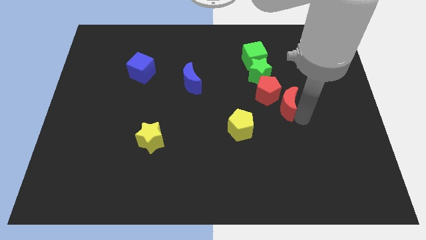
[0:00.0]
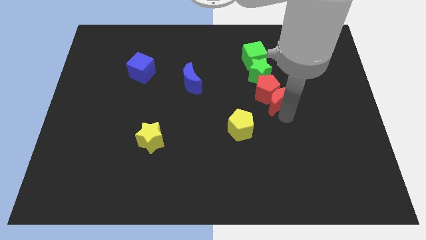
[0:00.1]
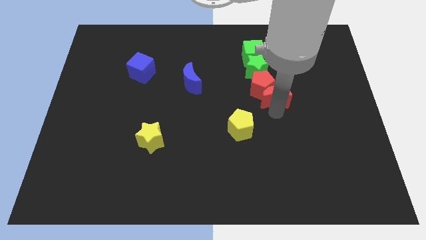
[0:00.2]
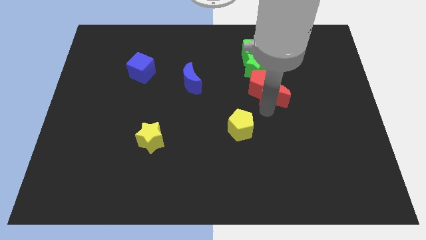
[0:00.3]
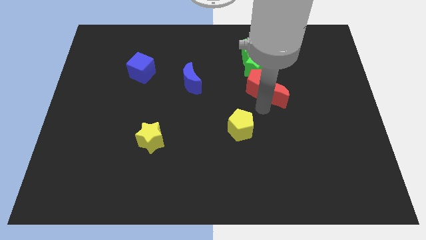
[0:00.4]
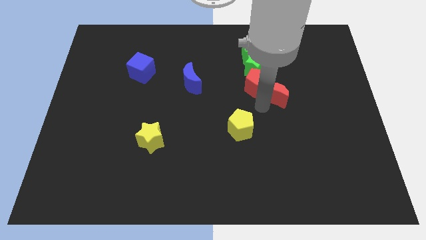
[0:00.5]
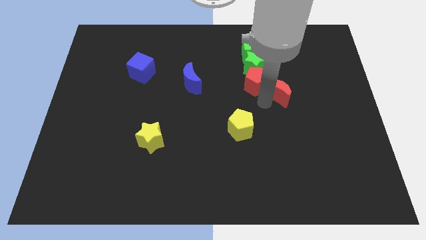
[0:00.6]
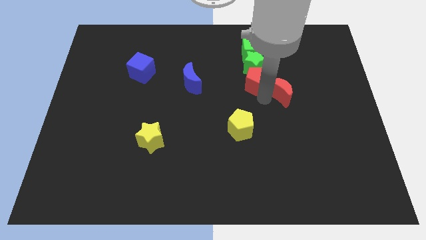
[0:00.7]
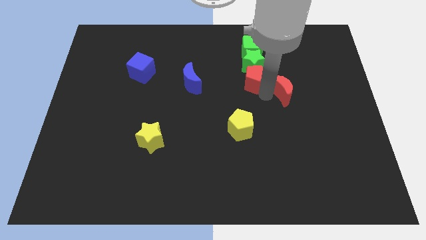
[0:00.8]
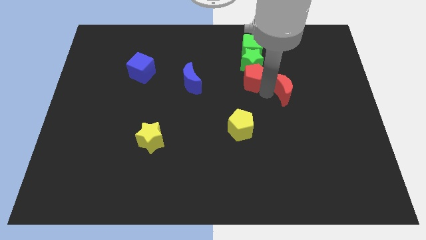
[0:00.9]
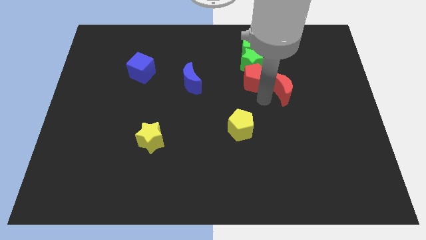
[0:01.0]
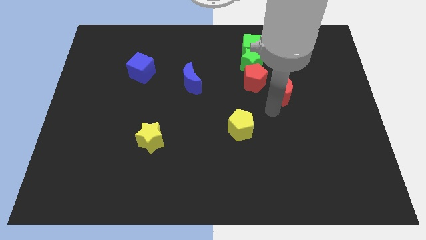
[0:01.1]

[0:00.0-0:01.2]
move red pentagon into green star

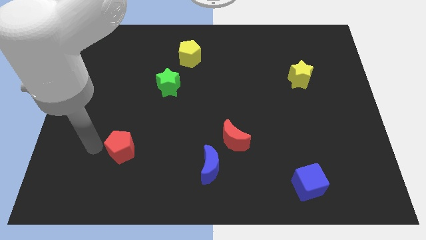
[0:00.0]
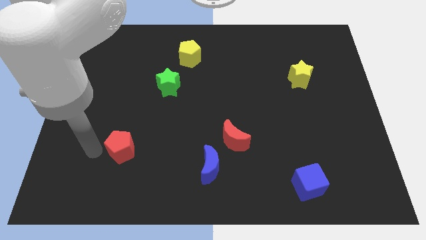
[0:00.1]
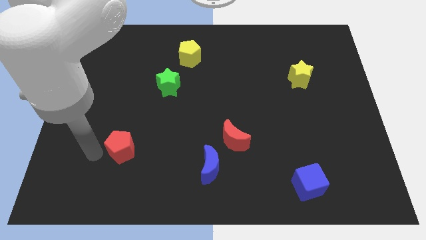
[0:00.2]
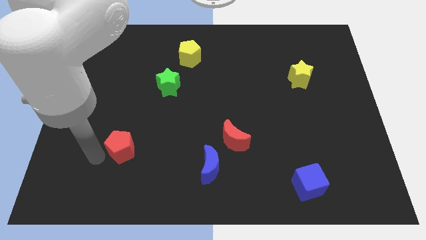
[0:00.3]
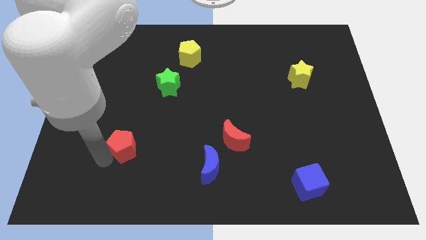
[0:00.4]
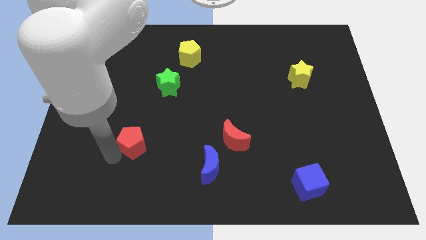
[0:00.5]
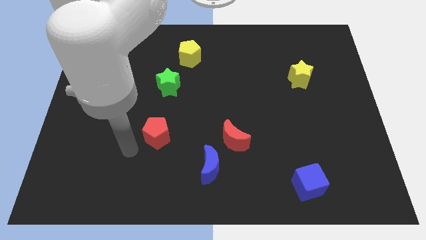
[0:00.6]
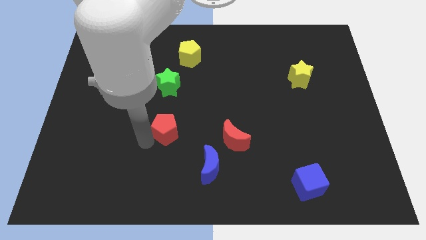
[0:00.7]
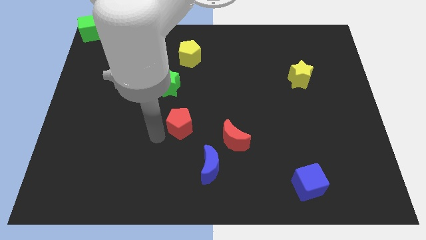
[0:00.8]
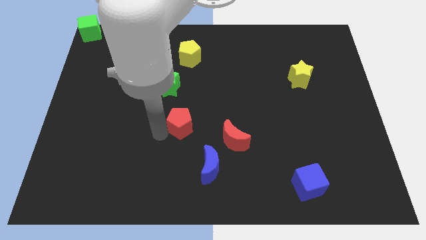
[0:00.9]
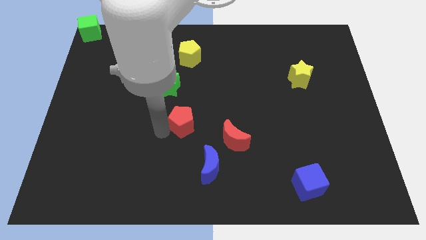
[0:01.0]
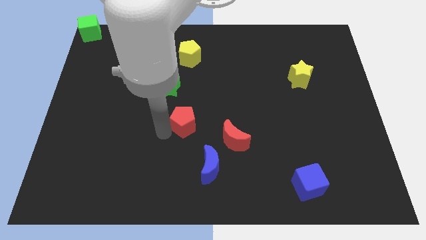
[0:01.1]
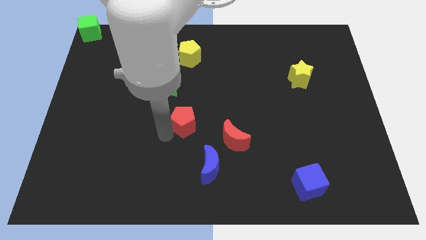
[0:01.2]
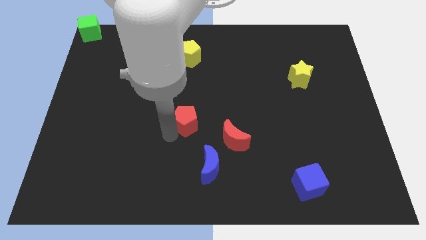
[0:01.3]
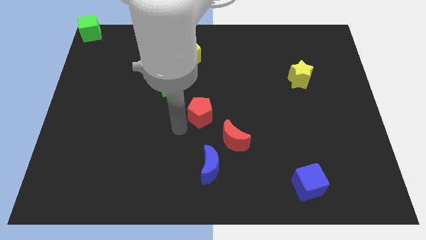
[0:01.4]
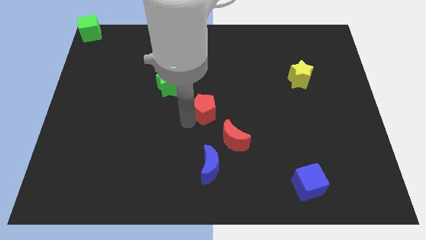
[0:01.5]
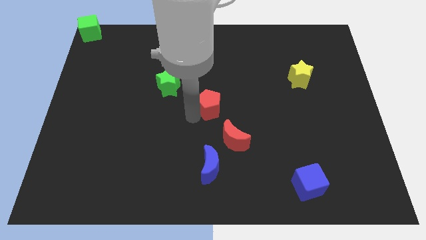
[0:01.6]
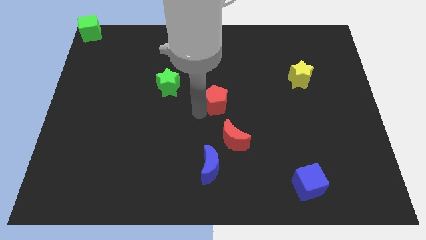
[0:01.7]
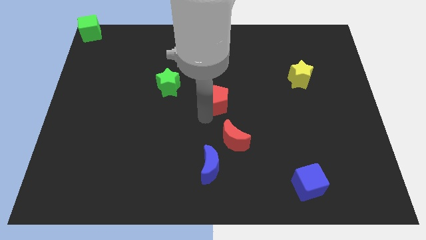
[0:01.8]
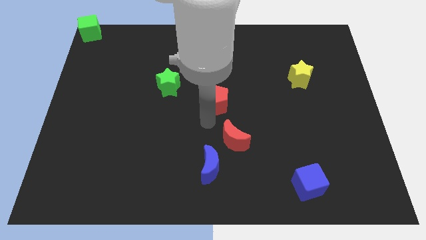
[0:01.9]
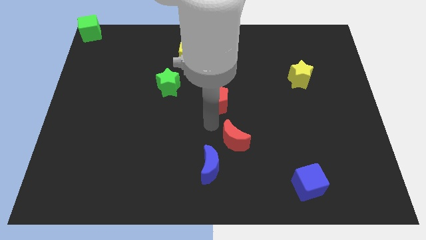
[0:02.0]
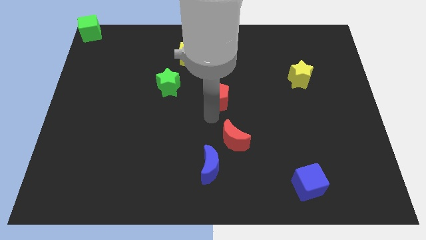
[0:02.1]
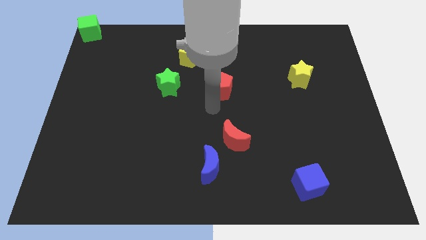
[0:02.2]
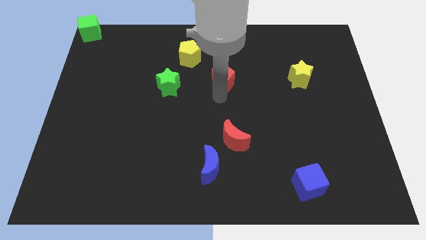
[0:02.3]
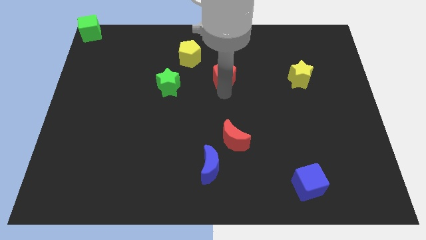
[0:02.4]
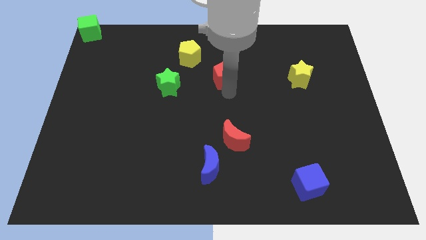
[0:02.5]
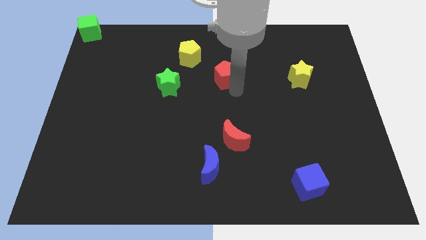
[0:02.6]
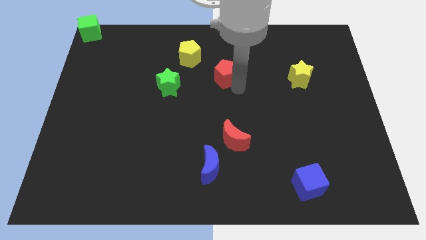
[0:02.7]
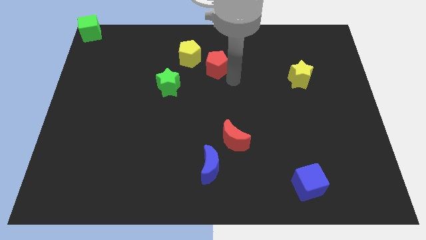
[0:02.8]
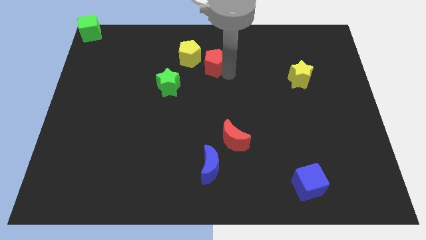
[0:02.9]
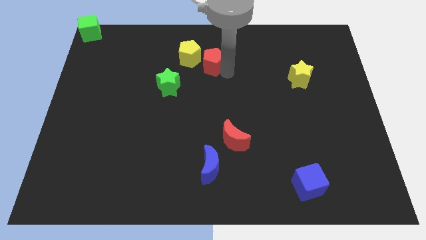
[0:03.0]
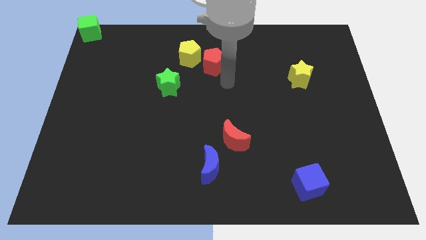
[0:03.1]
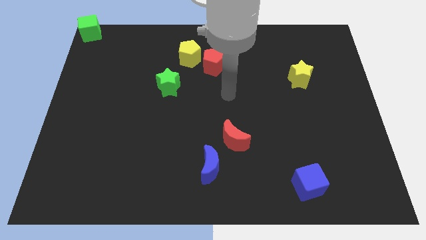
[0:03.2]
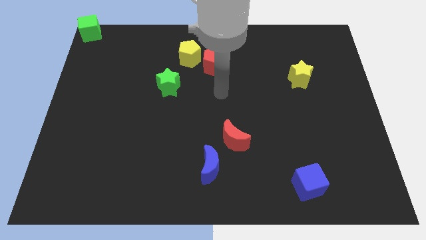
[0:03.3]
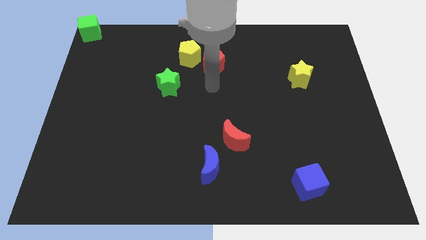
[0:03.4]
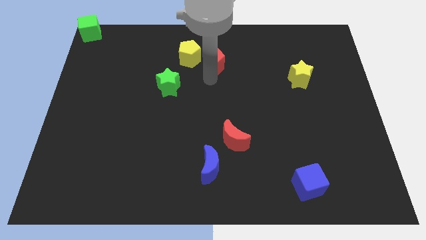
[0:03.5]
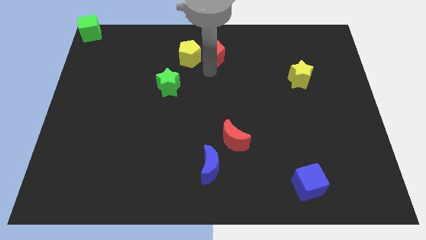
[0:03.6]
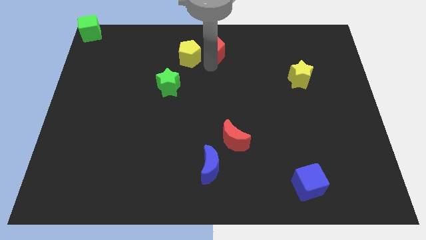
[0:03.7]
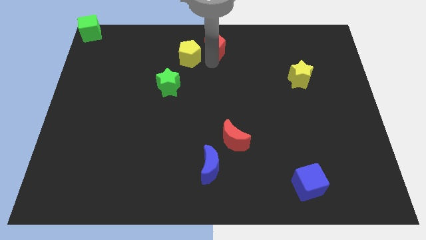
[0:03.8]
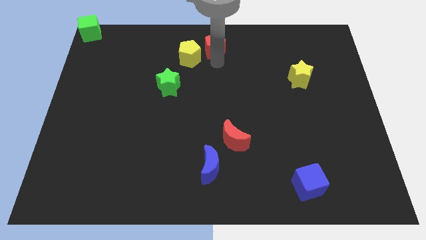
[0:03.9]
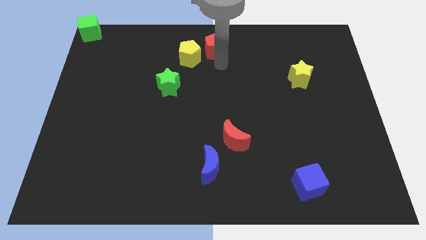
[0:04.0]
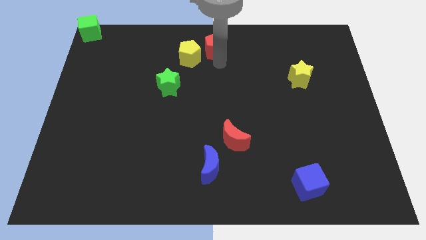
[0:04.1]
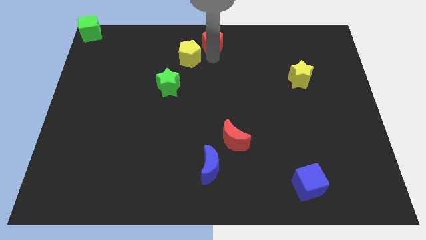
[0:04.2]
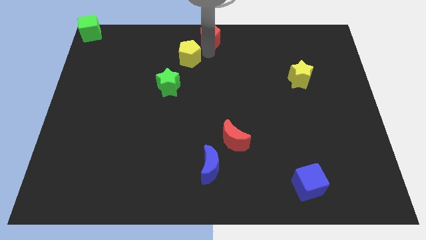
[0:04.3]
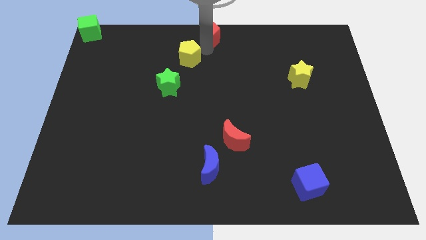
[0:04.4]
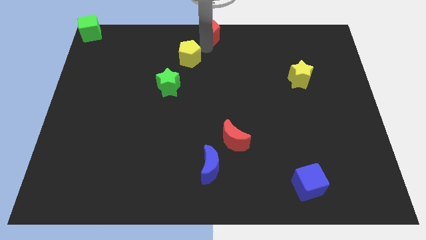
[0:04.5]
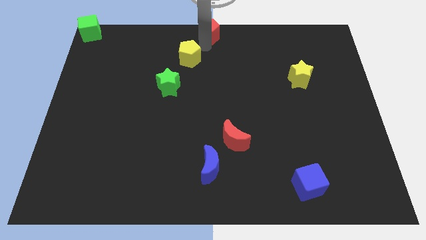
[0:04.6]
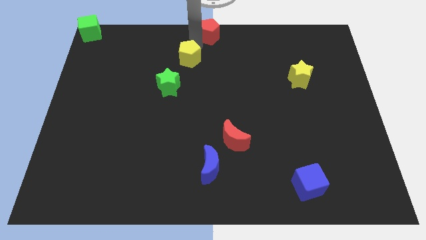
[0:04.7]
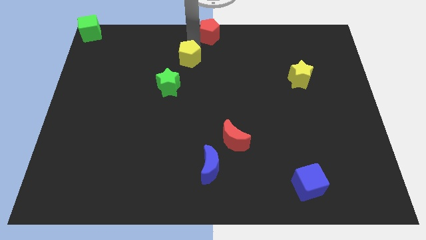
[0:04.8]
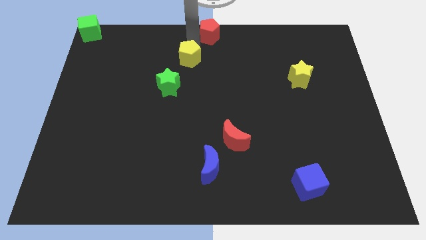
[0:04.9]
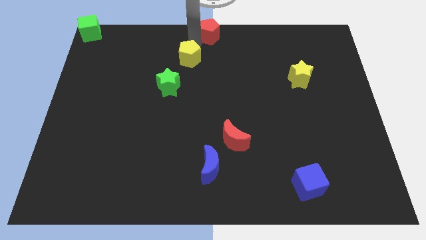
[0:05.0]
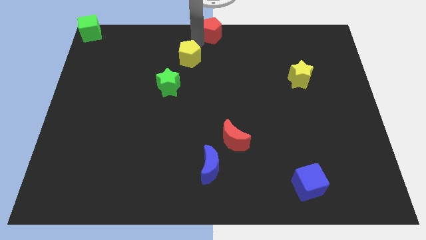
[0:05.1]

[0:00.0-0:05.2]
move the red pentagon to the top center of the board

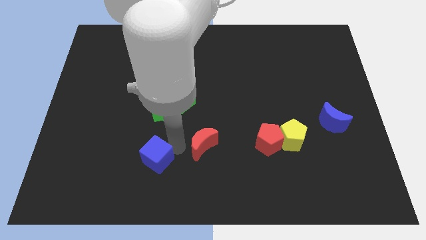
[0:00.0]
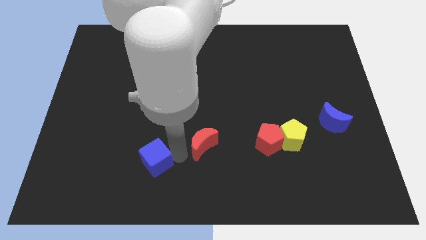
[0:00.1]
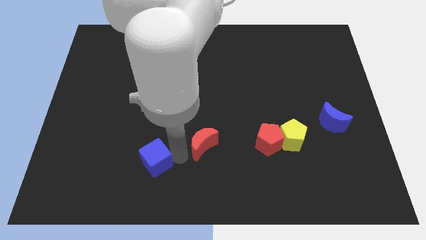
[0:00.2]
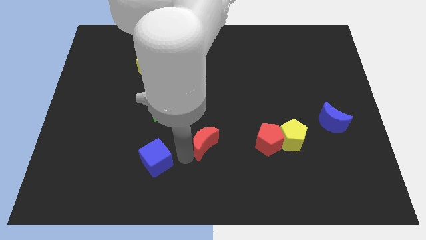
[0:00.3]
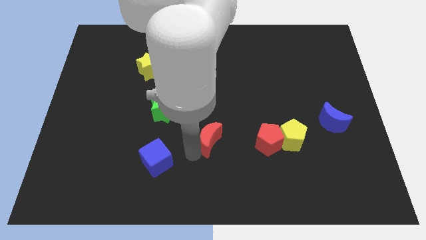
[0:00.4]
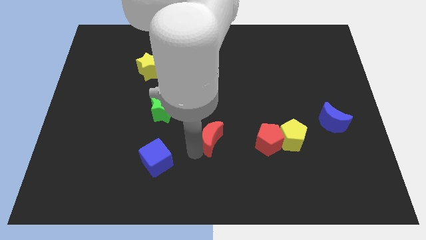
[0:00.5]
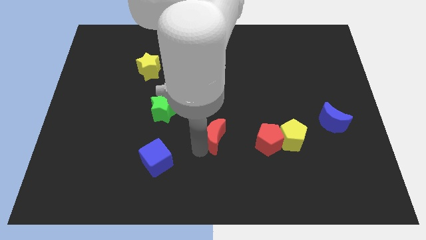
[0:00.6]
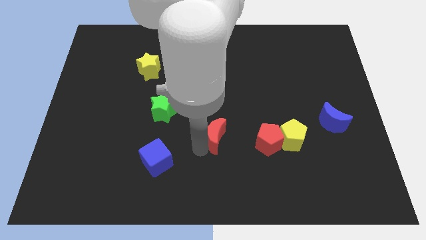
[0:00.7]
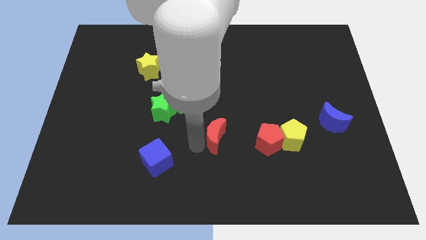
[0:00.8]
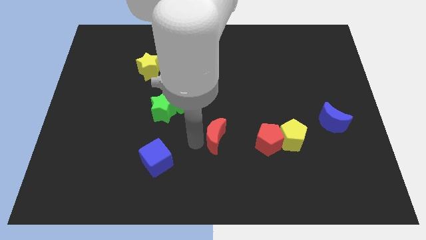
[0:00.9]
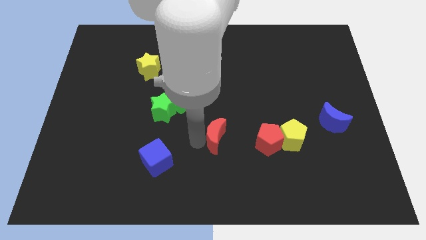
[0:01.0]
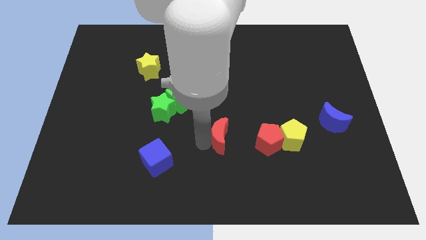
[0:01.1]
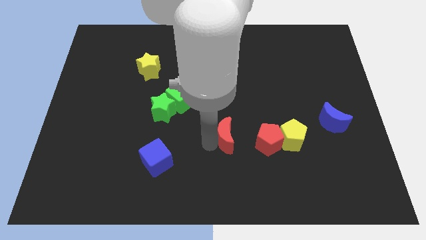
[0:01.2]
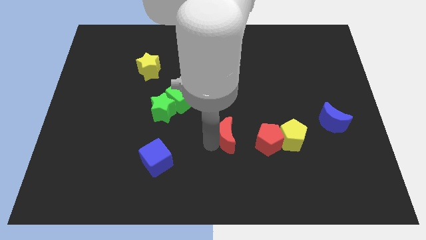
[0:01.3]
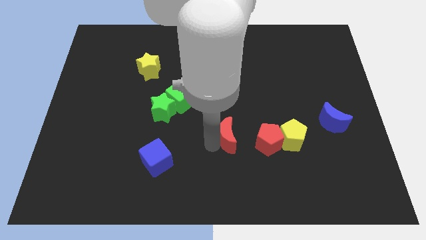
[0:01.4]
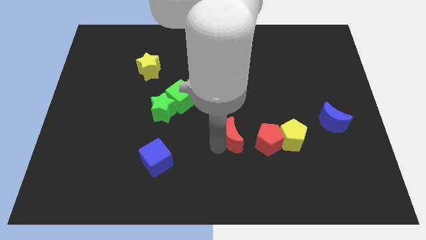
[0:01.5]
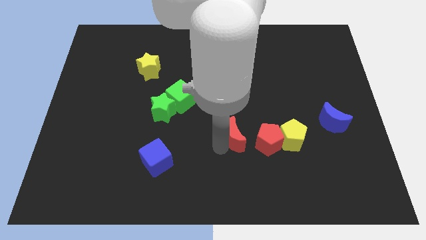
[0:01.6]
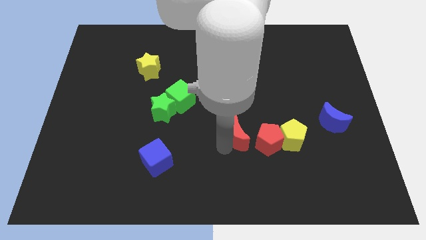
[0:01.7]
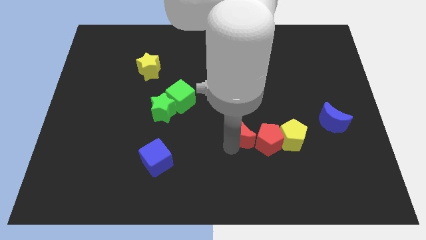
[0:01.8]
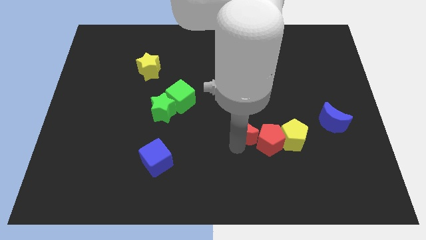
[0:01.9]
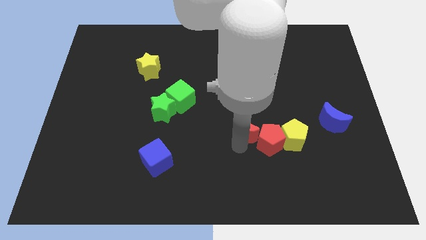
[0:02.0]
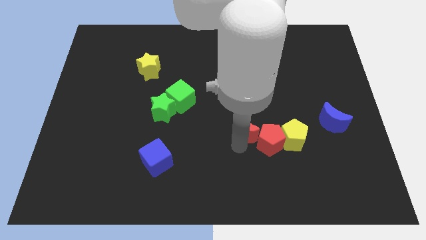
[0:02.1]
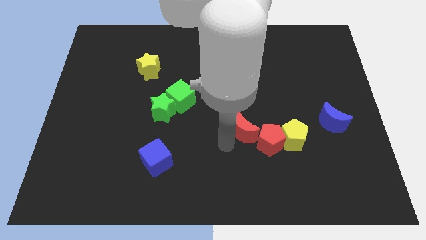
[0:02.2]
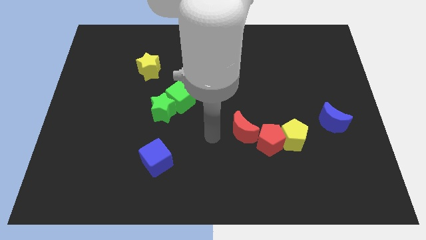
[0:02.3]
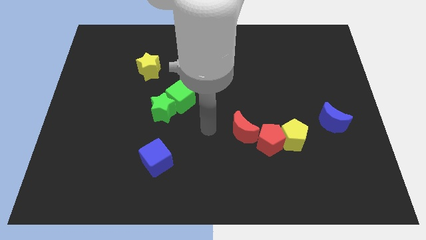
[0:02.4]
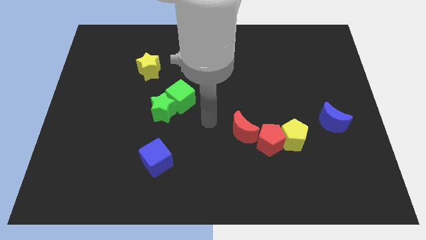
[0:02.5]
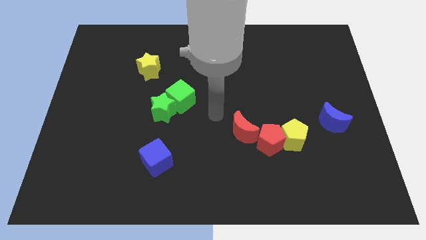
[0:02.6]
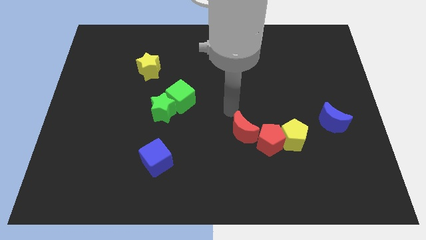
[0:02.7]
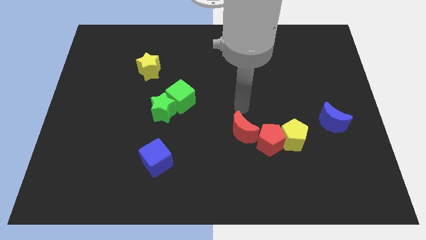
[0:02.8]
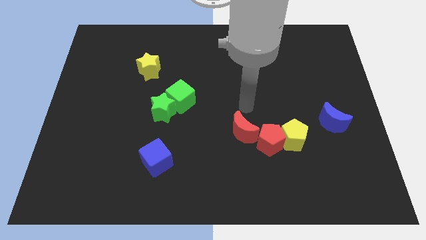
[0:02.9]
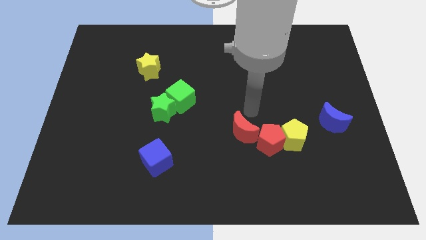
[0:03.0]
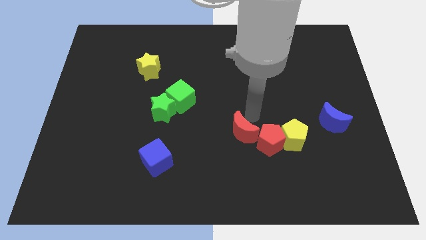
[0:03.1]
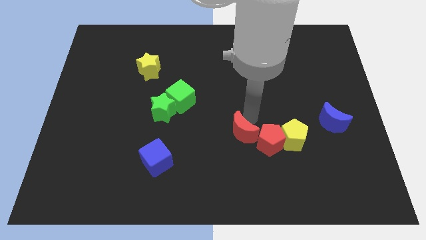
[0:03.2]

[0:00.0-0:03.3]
bring the red moon at the left side of the red pentagon
